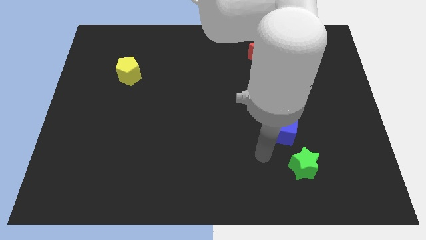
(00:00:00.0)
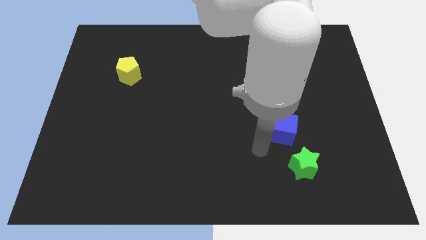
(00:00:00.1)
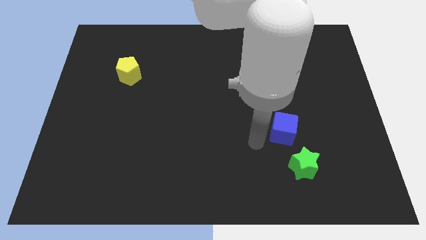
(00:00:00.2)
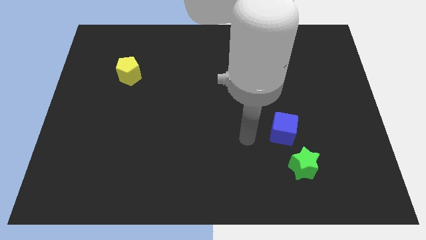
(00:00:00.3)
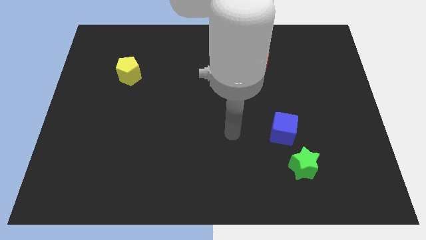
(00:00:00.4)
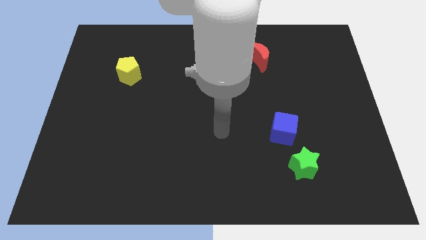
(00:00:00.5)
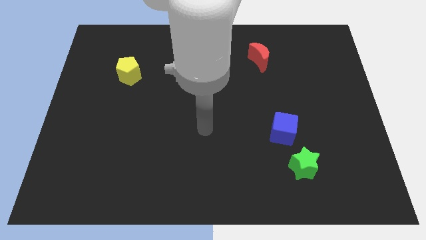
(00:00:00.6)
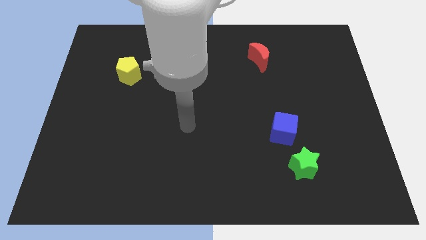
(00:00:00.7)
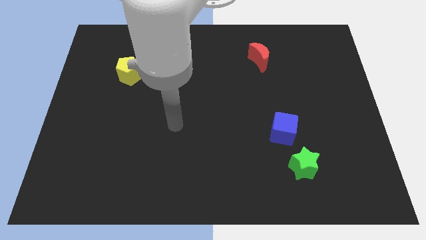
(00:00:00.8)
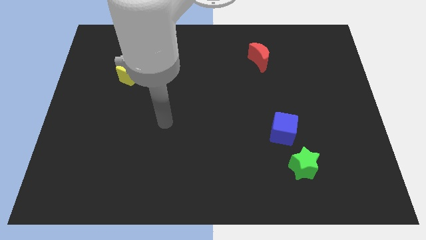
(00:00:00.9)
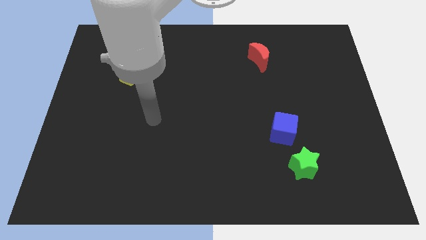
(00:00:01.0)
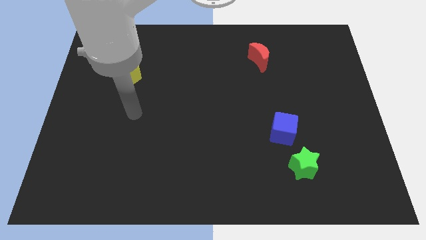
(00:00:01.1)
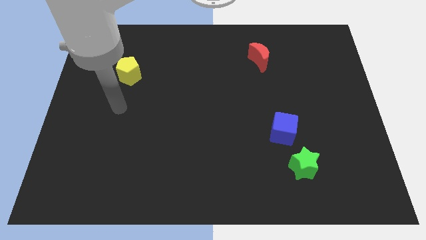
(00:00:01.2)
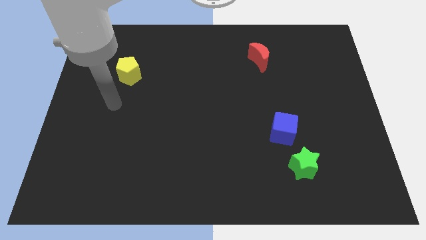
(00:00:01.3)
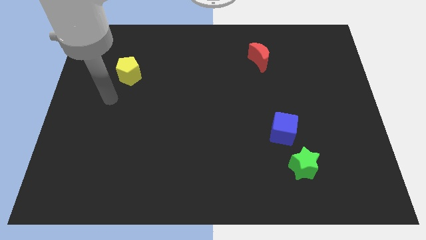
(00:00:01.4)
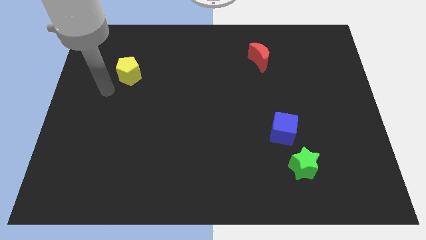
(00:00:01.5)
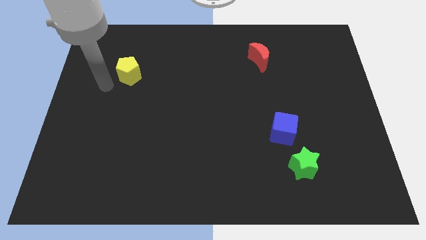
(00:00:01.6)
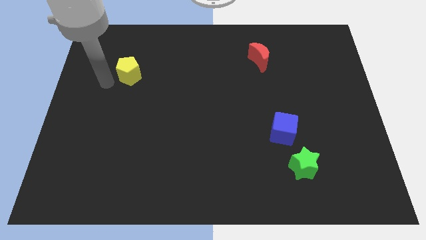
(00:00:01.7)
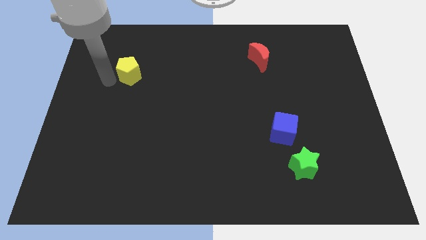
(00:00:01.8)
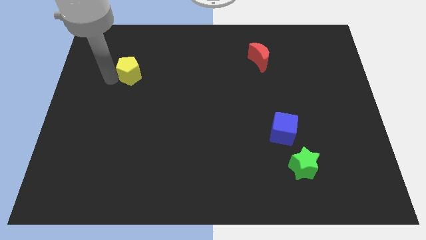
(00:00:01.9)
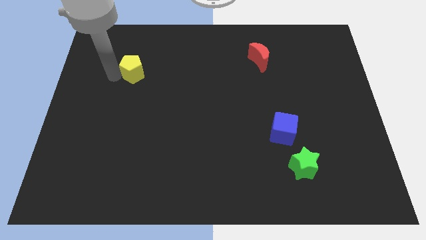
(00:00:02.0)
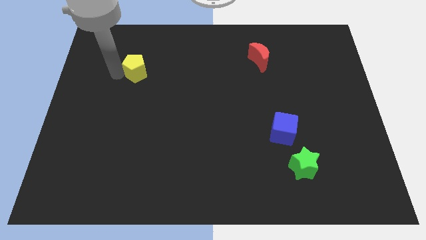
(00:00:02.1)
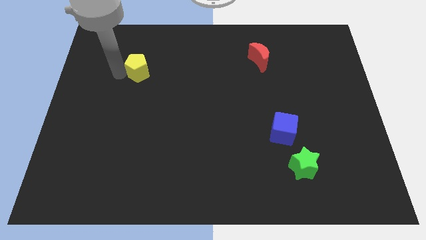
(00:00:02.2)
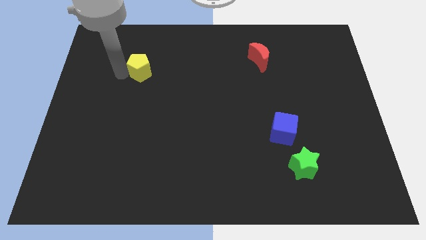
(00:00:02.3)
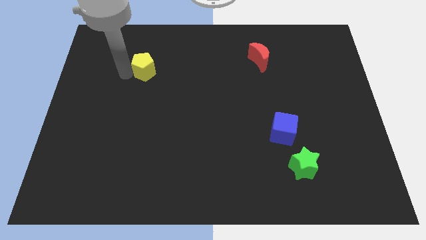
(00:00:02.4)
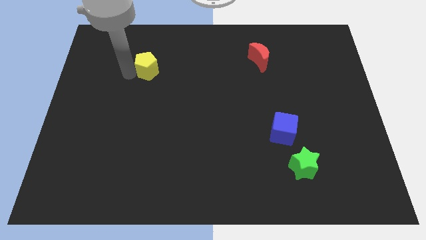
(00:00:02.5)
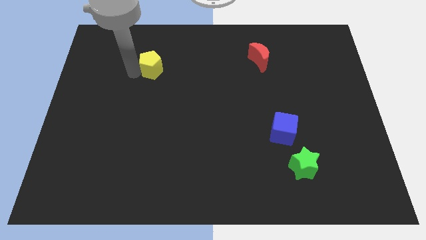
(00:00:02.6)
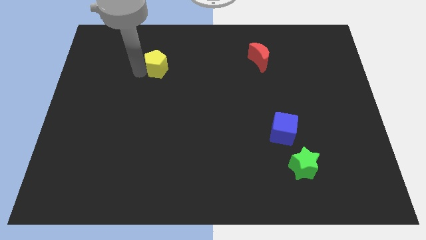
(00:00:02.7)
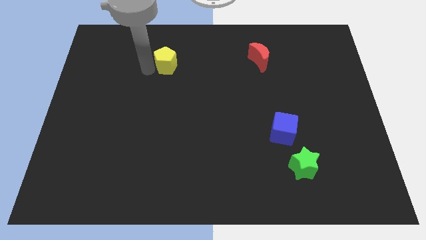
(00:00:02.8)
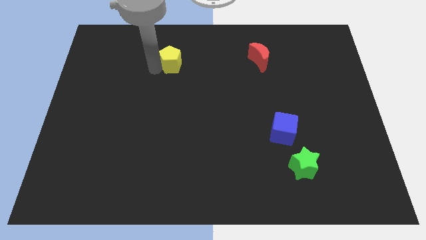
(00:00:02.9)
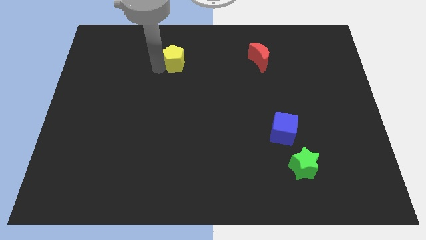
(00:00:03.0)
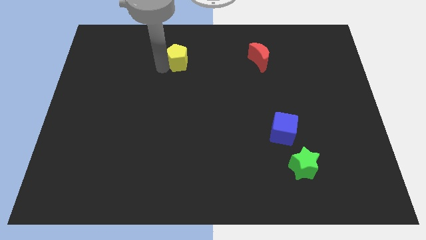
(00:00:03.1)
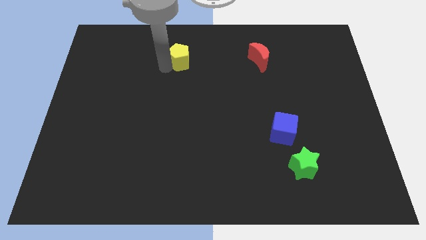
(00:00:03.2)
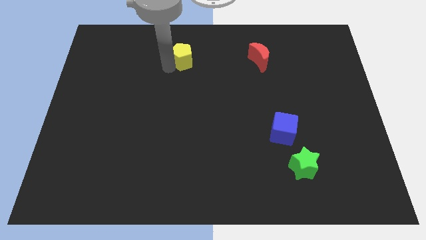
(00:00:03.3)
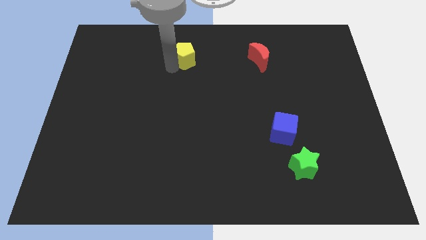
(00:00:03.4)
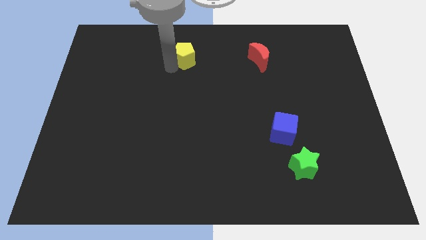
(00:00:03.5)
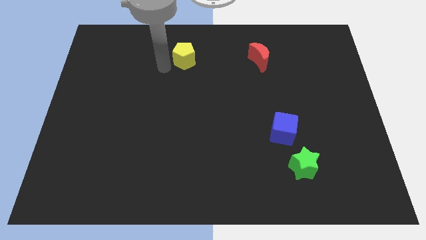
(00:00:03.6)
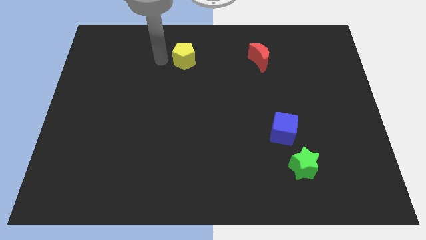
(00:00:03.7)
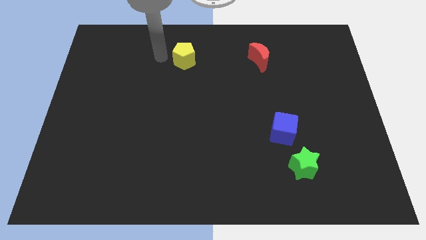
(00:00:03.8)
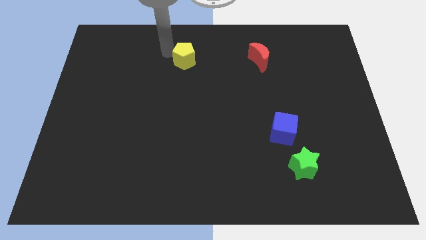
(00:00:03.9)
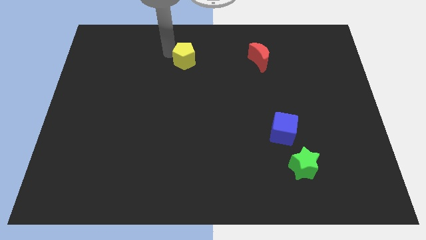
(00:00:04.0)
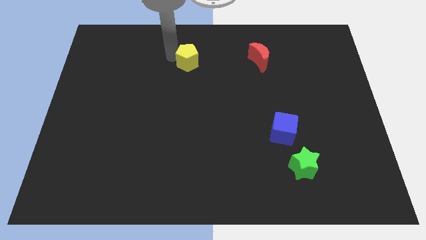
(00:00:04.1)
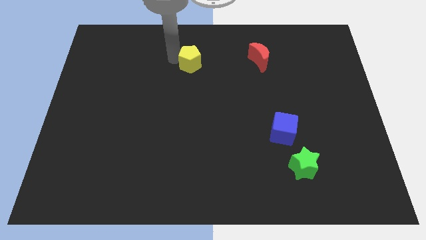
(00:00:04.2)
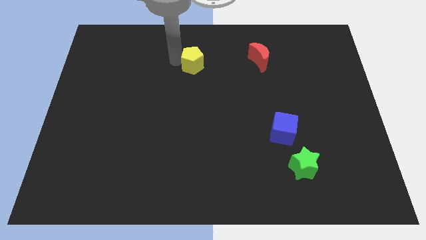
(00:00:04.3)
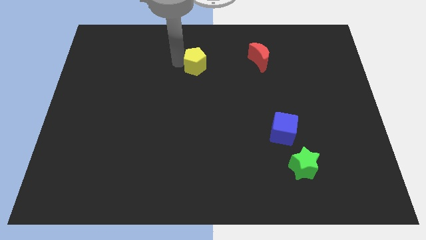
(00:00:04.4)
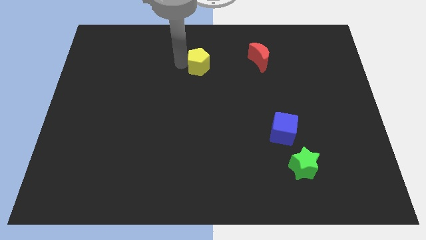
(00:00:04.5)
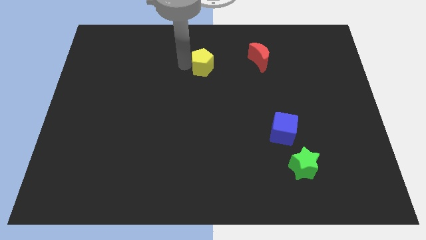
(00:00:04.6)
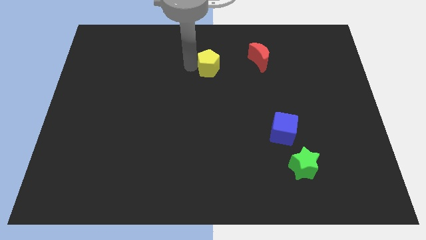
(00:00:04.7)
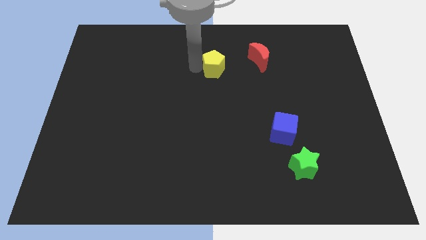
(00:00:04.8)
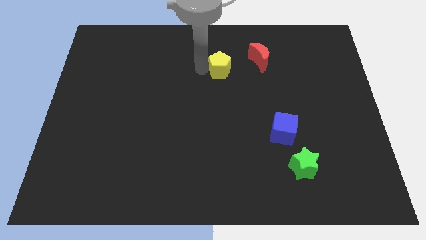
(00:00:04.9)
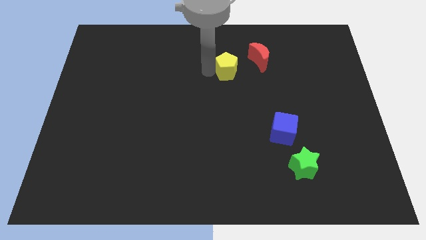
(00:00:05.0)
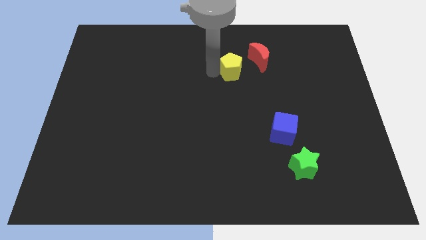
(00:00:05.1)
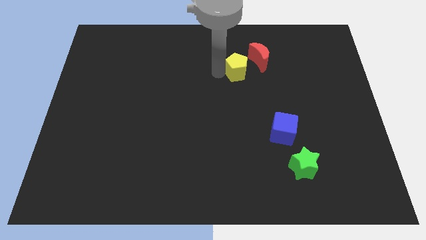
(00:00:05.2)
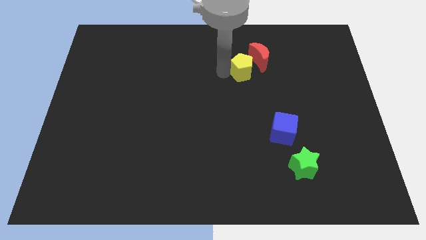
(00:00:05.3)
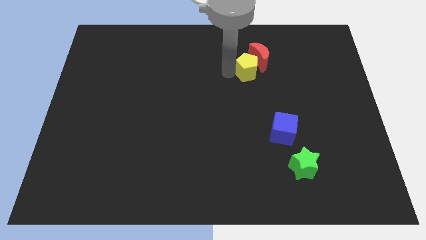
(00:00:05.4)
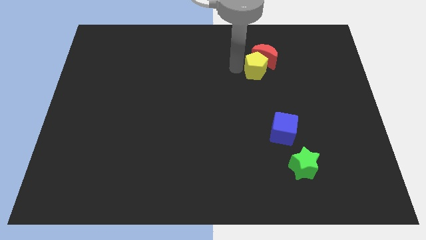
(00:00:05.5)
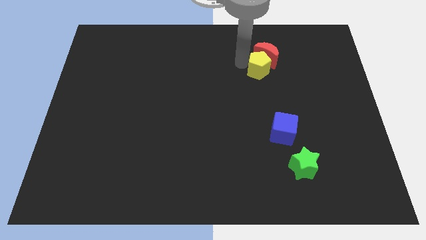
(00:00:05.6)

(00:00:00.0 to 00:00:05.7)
slide the yellow pentagon next to the red block

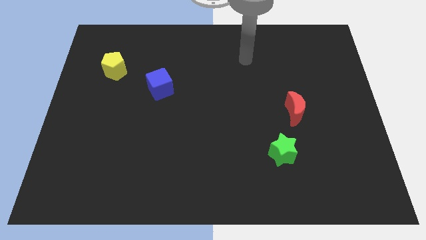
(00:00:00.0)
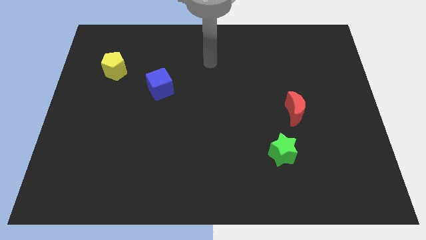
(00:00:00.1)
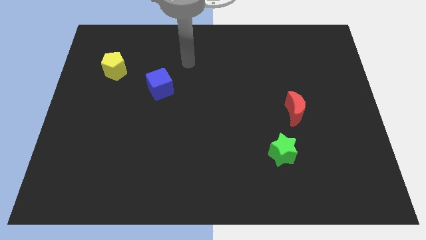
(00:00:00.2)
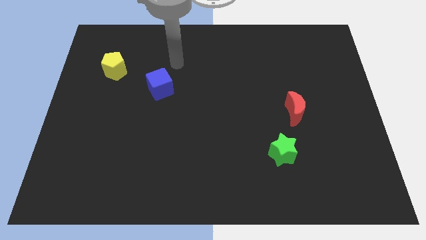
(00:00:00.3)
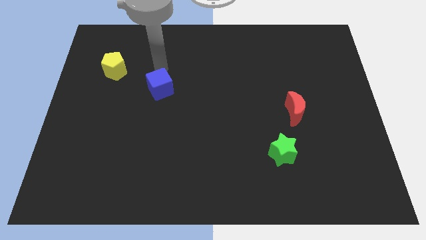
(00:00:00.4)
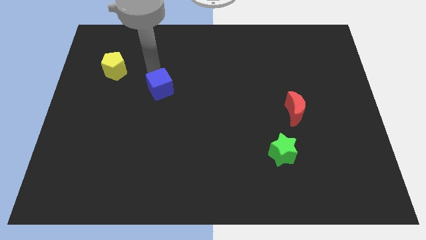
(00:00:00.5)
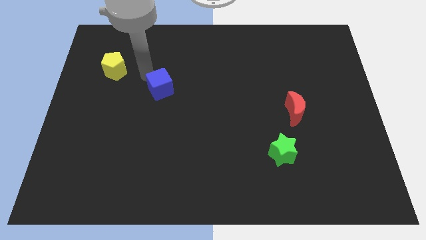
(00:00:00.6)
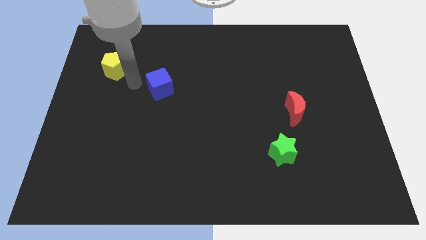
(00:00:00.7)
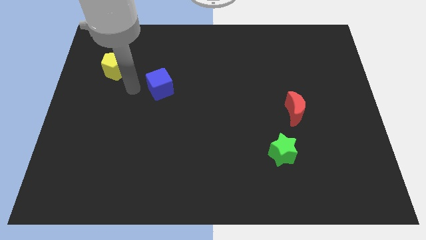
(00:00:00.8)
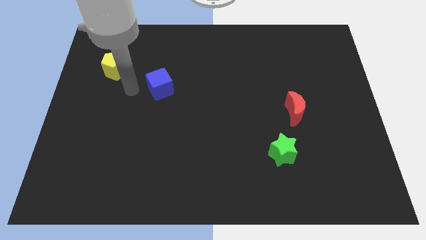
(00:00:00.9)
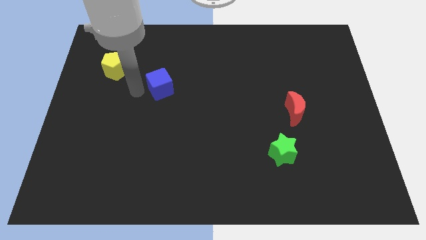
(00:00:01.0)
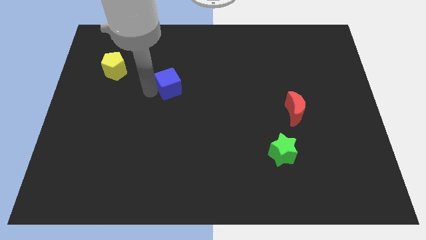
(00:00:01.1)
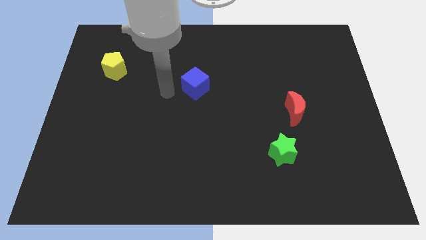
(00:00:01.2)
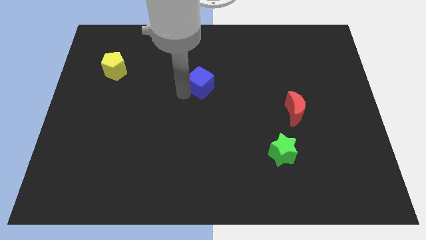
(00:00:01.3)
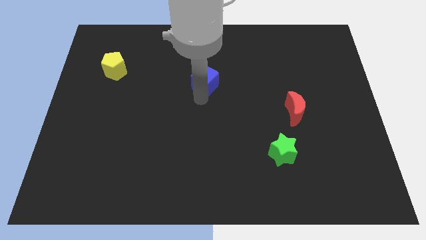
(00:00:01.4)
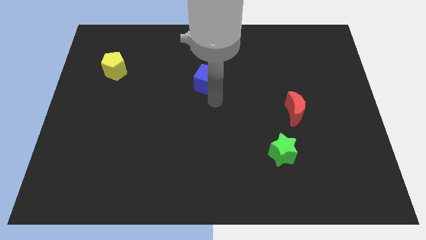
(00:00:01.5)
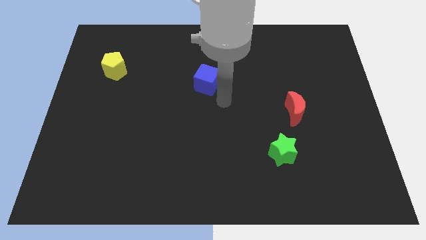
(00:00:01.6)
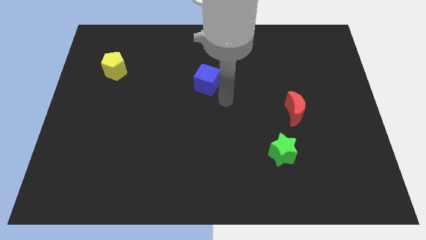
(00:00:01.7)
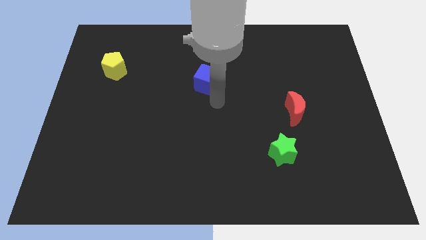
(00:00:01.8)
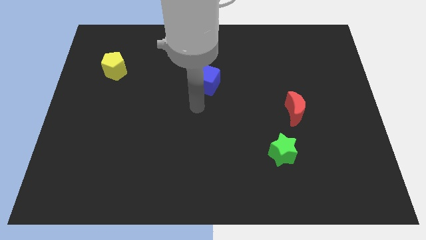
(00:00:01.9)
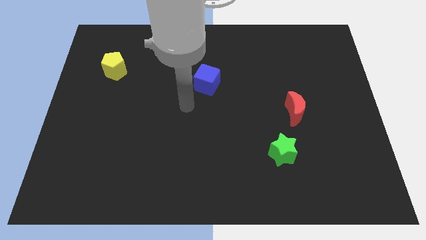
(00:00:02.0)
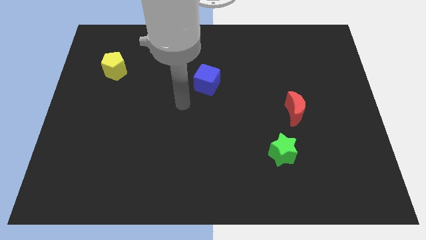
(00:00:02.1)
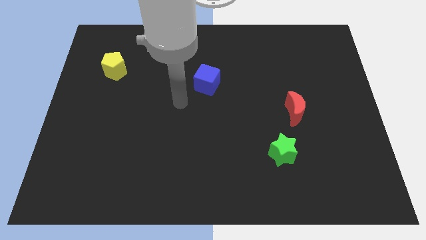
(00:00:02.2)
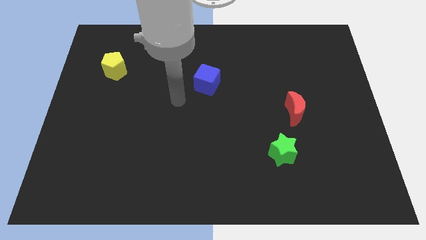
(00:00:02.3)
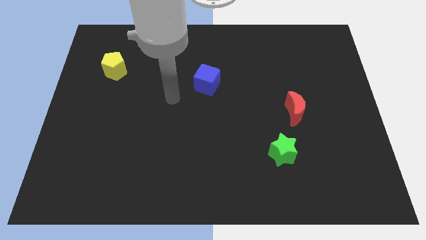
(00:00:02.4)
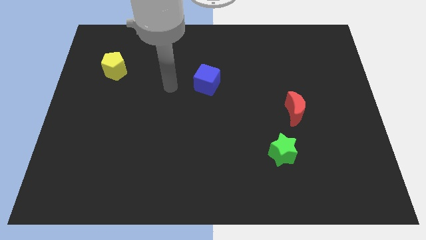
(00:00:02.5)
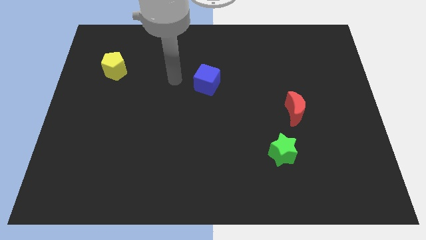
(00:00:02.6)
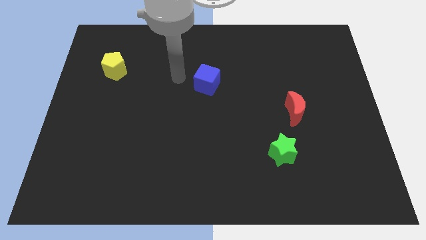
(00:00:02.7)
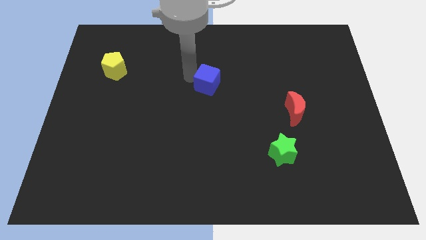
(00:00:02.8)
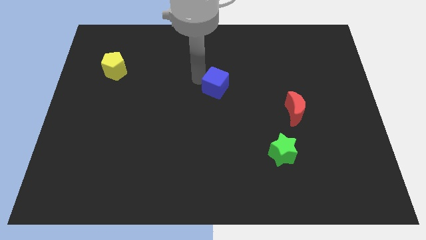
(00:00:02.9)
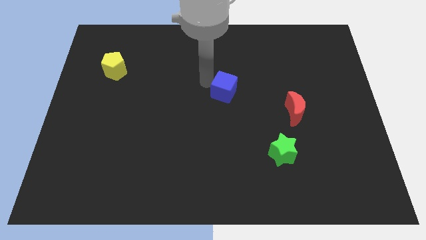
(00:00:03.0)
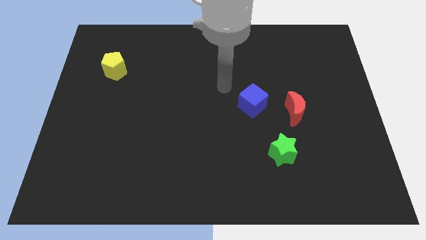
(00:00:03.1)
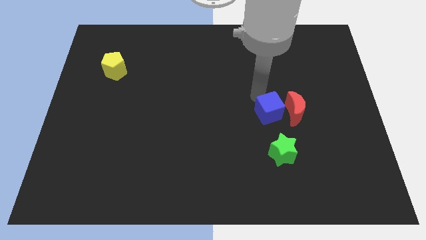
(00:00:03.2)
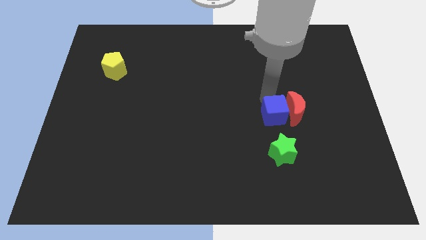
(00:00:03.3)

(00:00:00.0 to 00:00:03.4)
push the cube towards the red block
